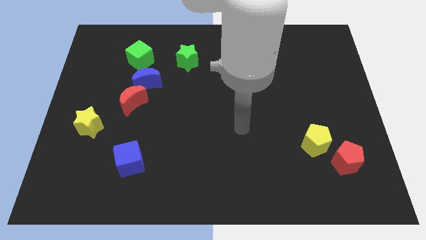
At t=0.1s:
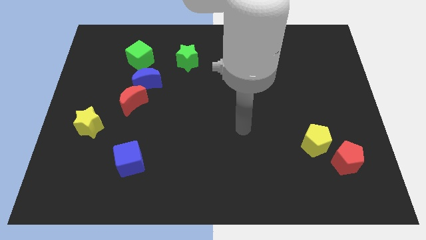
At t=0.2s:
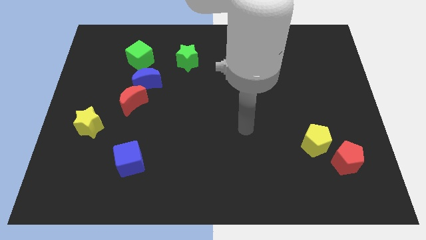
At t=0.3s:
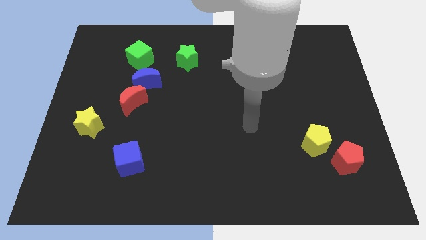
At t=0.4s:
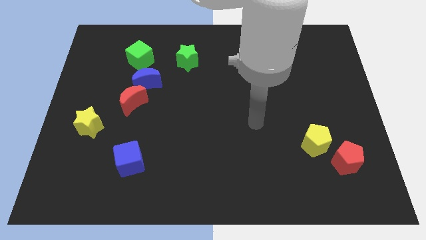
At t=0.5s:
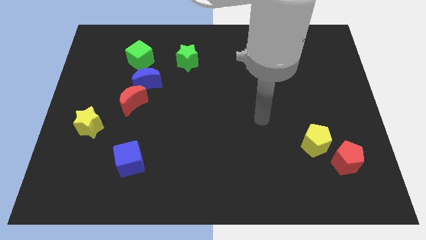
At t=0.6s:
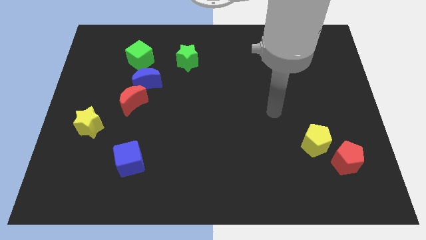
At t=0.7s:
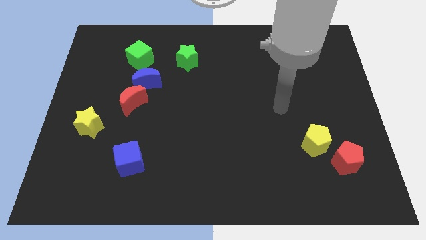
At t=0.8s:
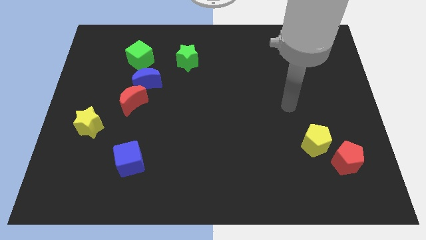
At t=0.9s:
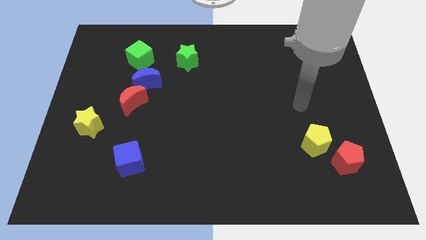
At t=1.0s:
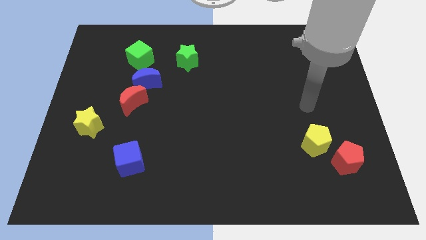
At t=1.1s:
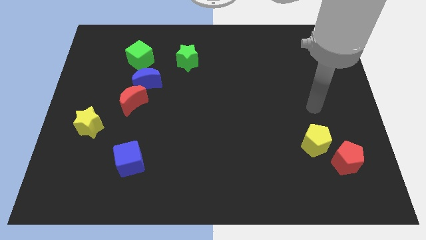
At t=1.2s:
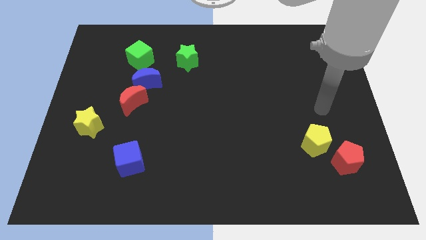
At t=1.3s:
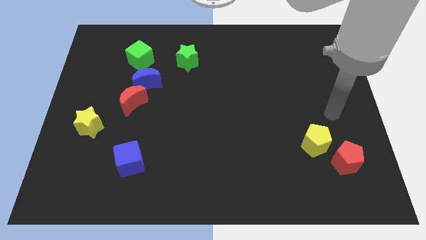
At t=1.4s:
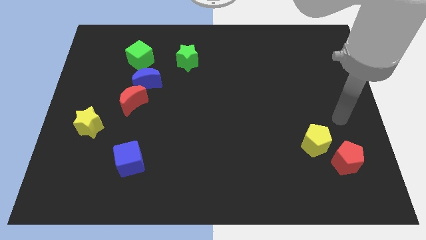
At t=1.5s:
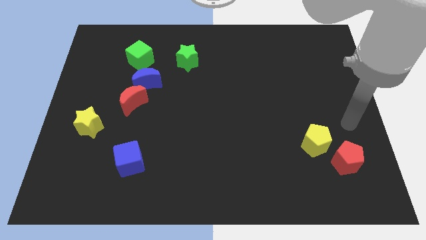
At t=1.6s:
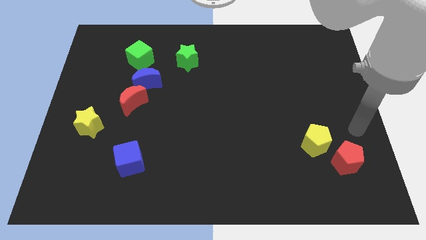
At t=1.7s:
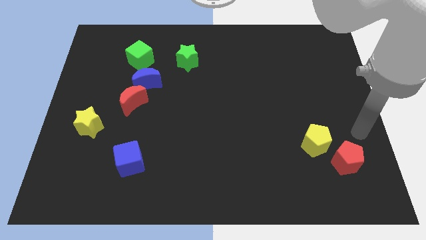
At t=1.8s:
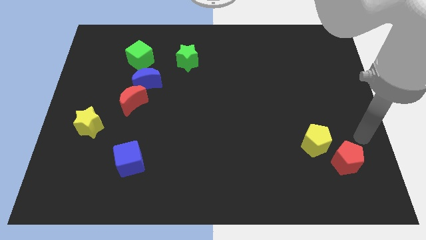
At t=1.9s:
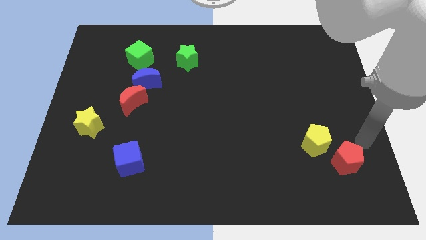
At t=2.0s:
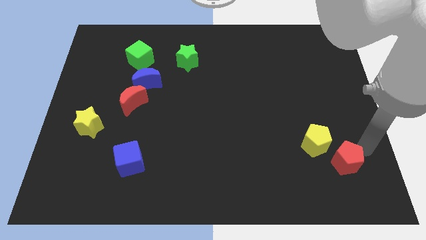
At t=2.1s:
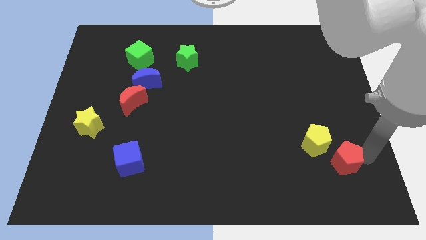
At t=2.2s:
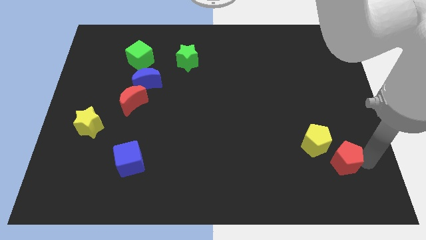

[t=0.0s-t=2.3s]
place your arm to the right of the red pentagon

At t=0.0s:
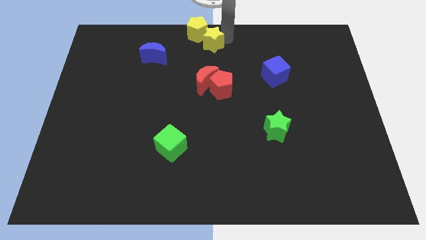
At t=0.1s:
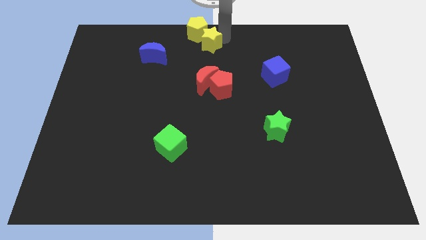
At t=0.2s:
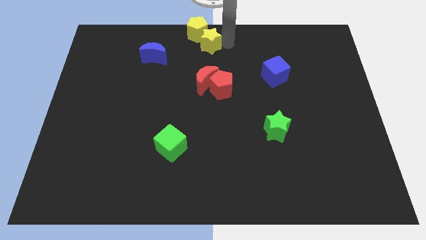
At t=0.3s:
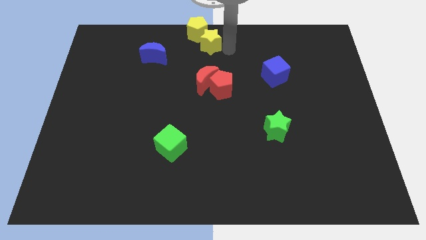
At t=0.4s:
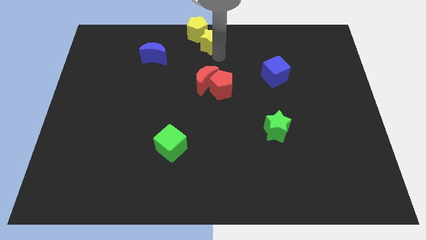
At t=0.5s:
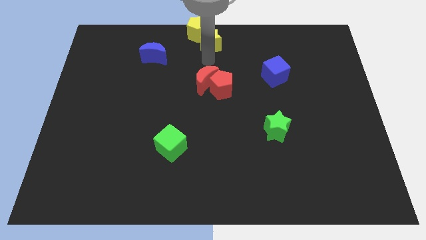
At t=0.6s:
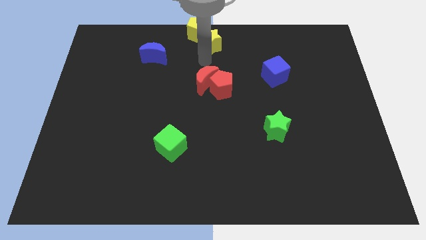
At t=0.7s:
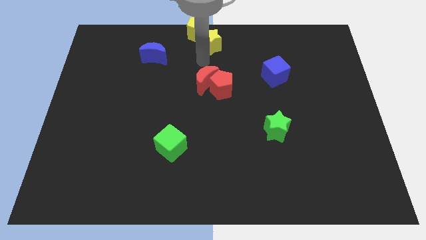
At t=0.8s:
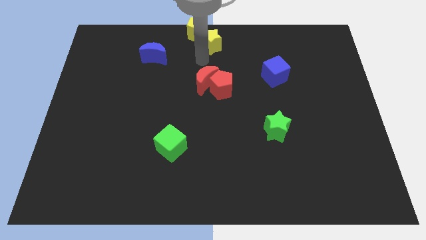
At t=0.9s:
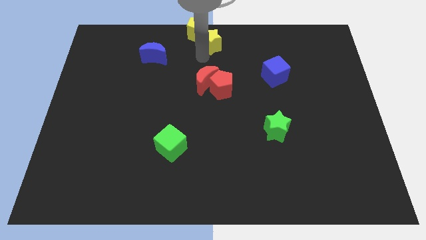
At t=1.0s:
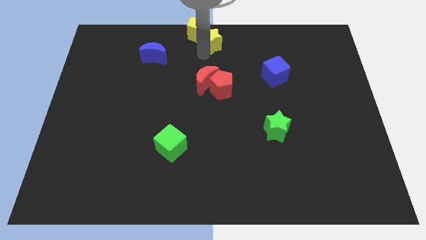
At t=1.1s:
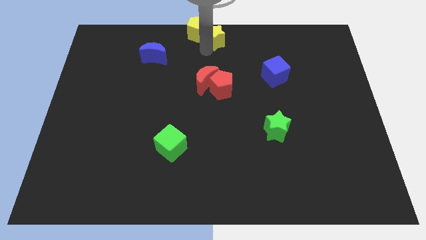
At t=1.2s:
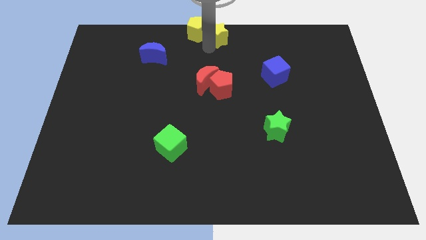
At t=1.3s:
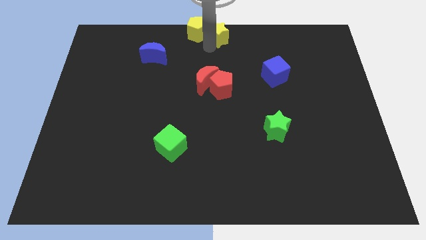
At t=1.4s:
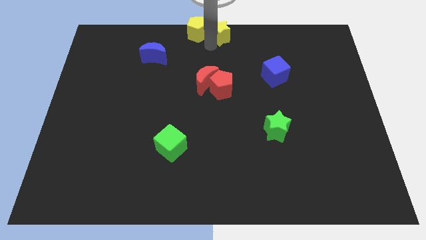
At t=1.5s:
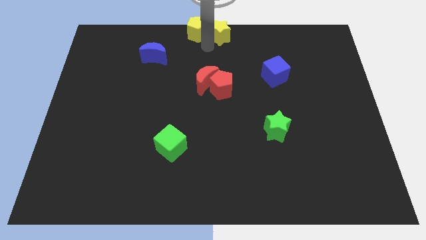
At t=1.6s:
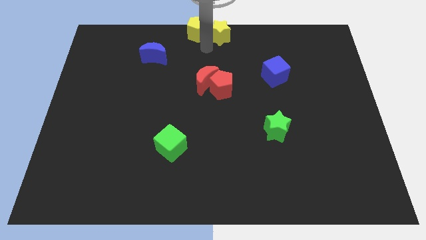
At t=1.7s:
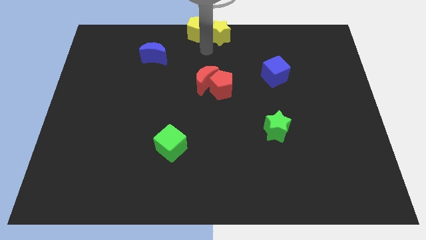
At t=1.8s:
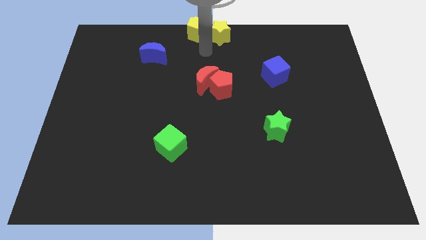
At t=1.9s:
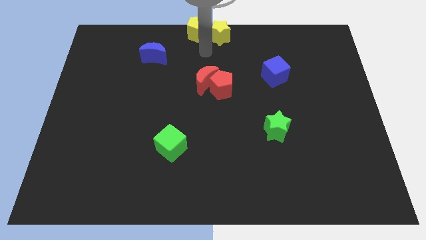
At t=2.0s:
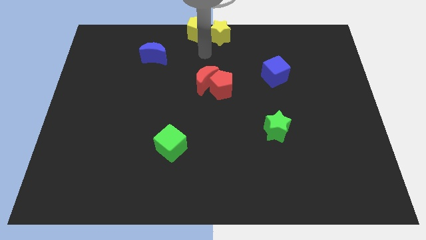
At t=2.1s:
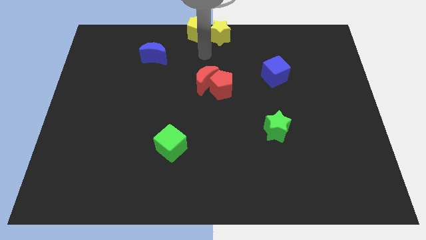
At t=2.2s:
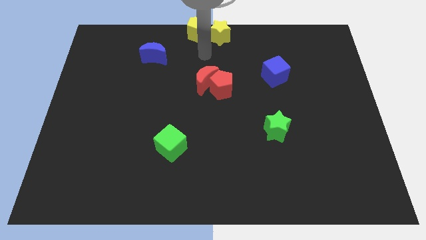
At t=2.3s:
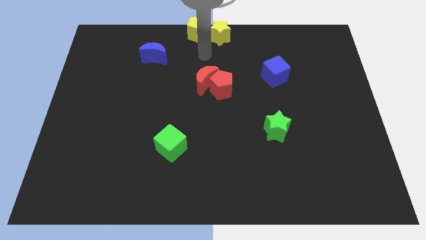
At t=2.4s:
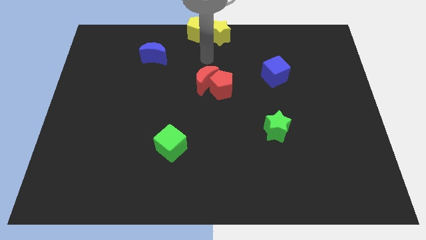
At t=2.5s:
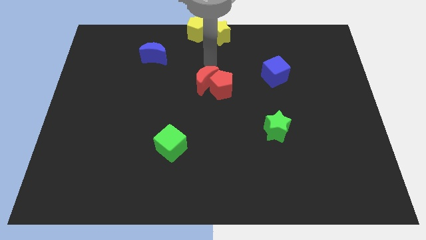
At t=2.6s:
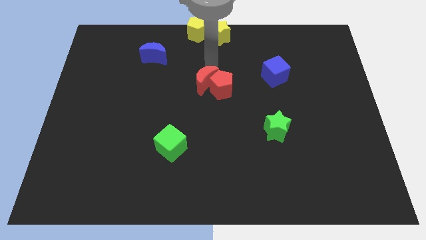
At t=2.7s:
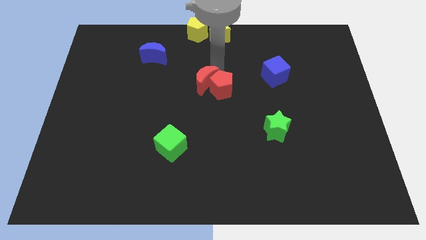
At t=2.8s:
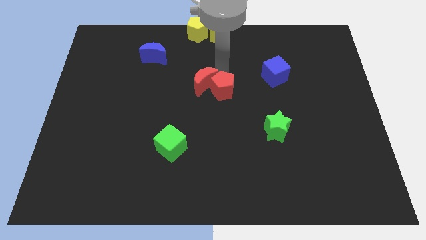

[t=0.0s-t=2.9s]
place your arm to the top of red moon

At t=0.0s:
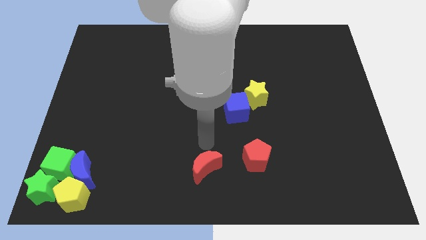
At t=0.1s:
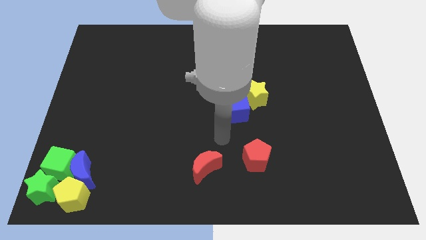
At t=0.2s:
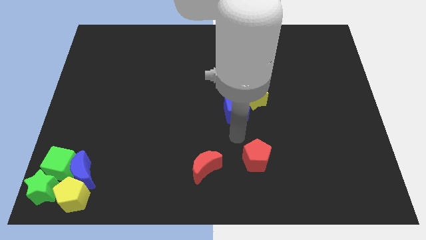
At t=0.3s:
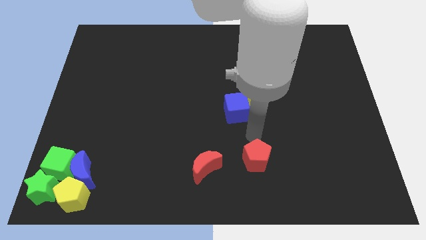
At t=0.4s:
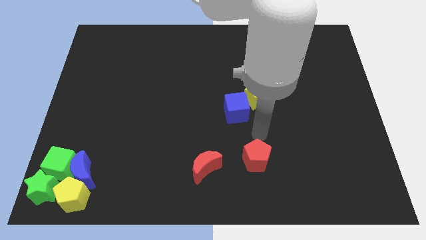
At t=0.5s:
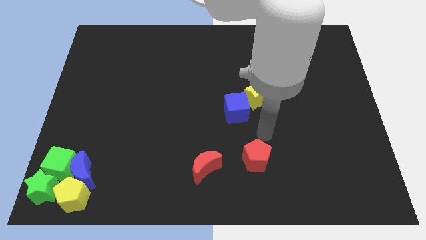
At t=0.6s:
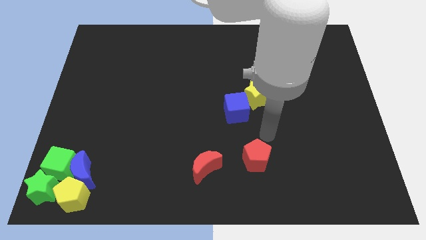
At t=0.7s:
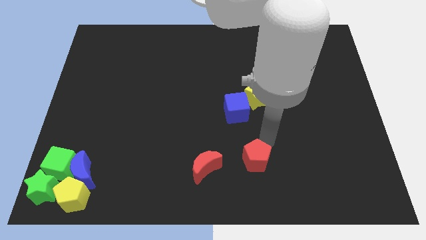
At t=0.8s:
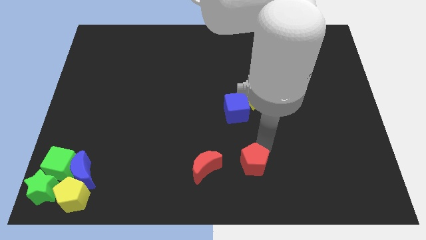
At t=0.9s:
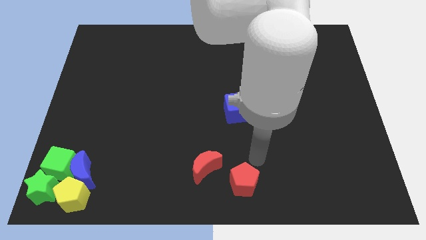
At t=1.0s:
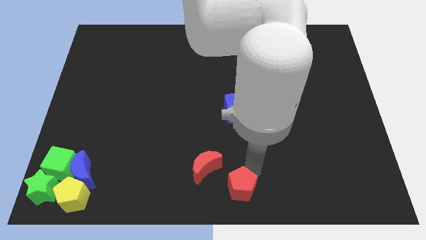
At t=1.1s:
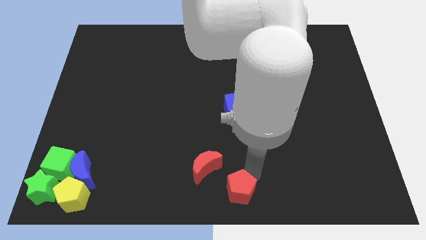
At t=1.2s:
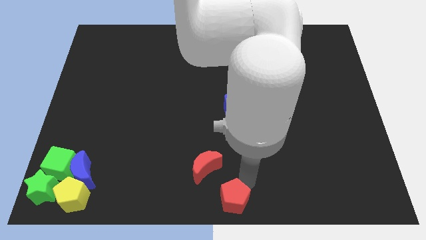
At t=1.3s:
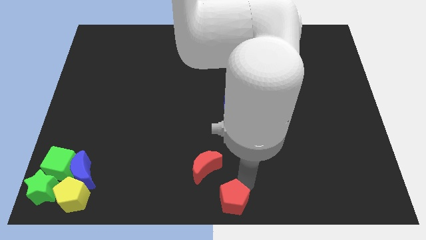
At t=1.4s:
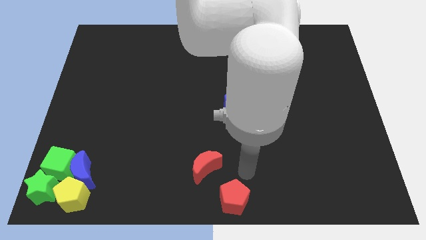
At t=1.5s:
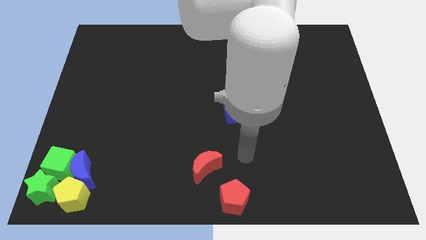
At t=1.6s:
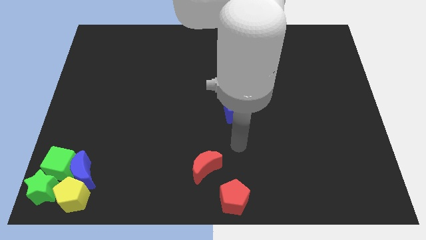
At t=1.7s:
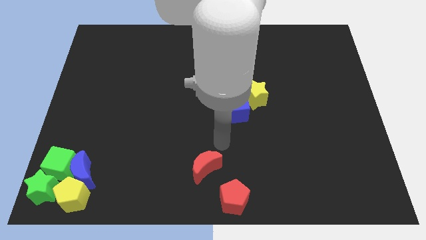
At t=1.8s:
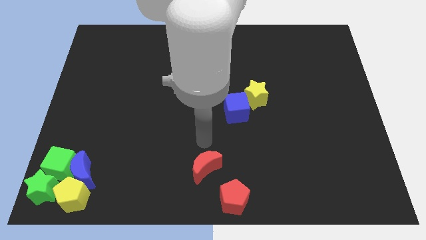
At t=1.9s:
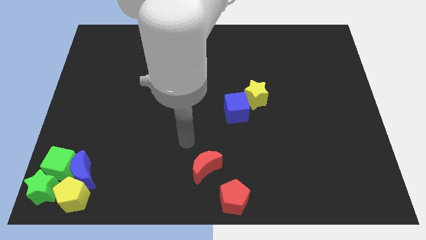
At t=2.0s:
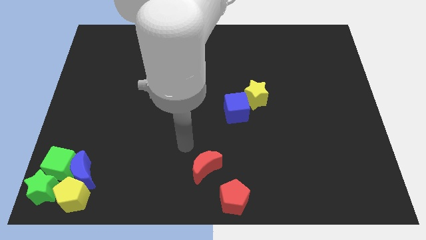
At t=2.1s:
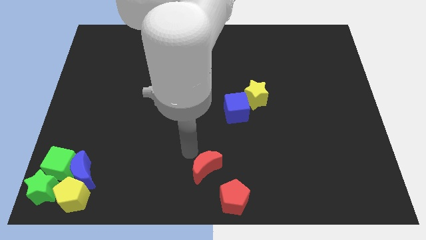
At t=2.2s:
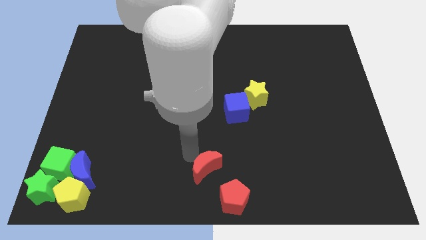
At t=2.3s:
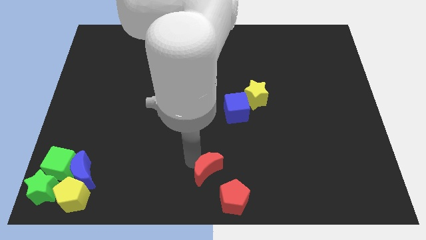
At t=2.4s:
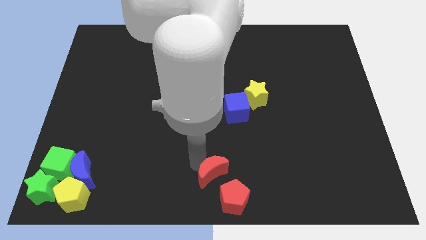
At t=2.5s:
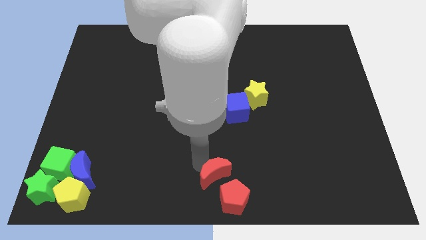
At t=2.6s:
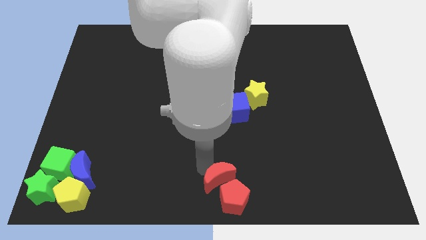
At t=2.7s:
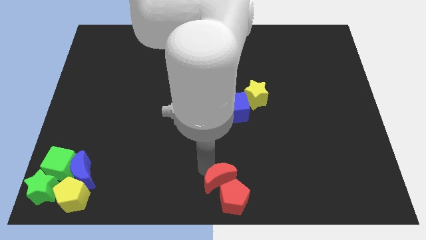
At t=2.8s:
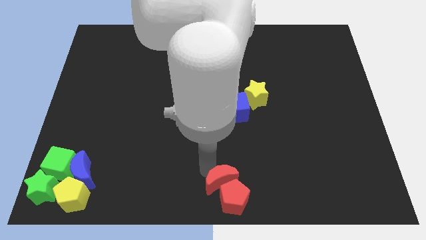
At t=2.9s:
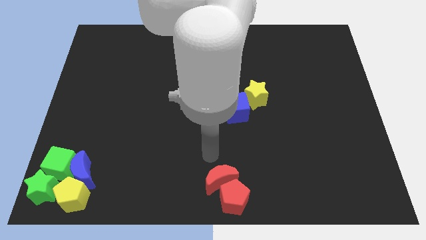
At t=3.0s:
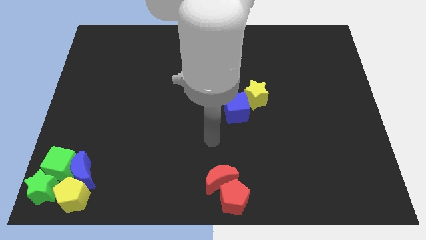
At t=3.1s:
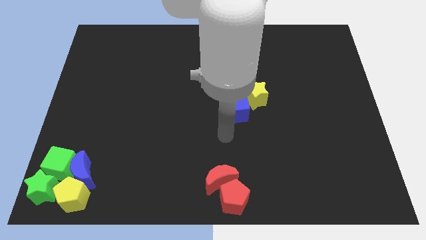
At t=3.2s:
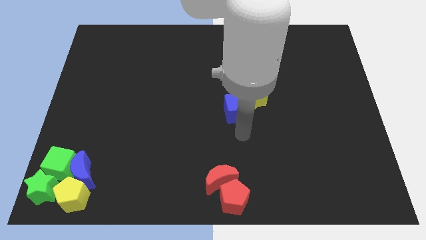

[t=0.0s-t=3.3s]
place the red blocks at the bottom center of the board

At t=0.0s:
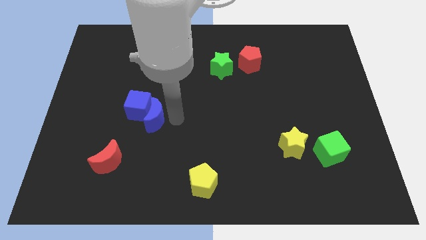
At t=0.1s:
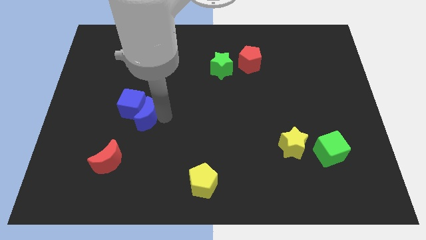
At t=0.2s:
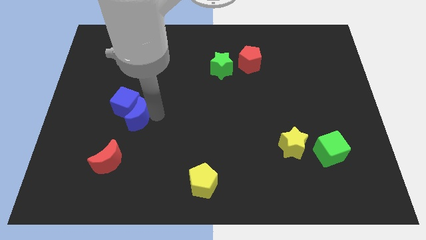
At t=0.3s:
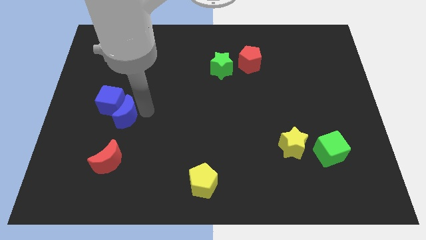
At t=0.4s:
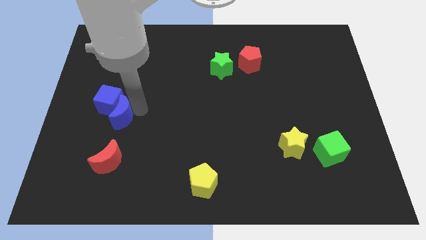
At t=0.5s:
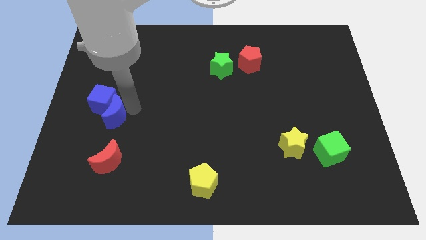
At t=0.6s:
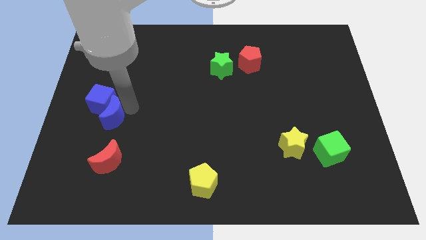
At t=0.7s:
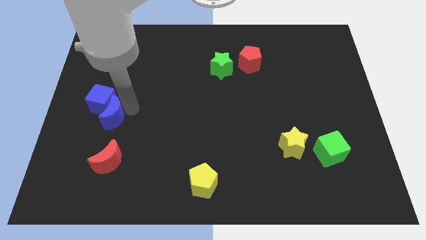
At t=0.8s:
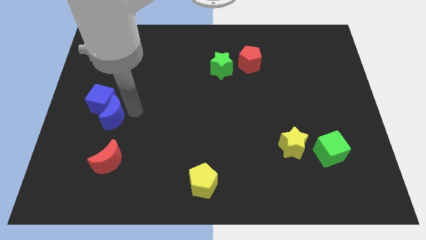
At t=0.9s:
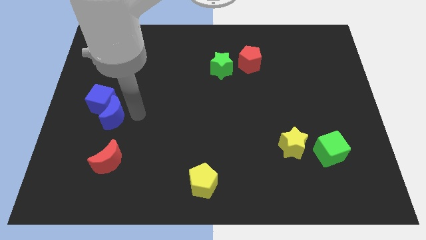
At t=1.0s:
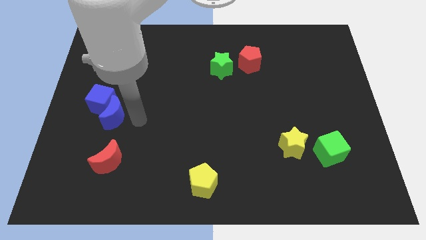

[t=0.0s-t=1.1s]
push the blue moon to the top side of the red moon
